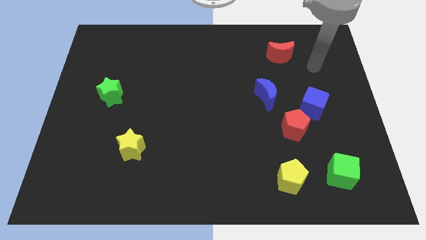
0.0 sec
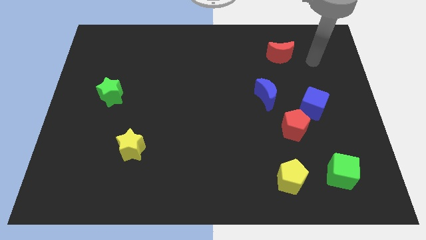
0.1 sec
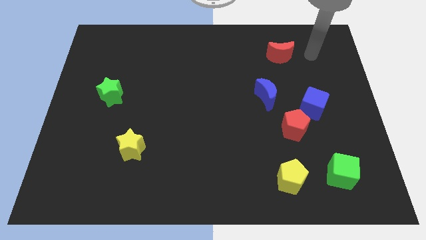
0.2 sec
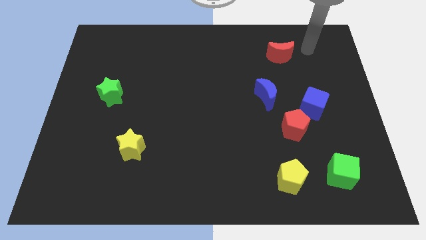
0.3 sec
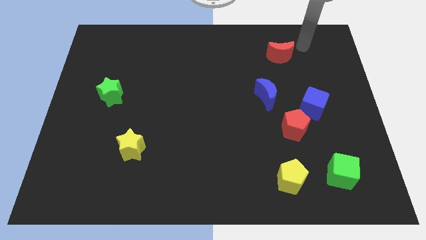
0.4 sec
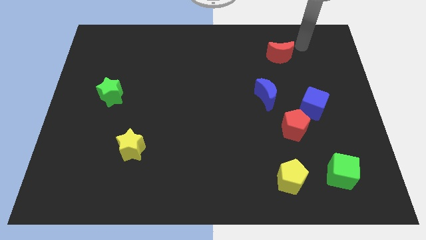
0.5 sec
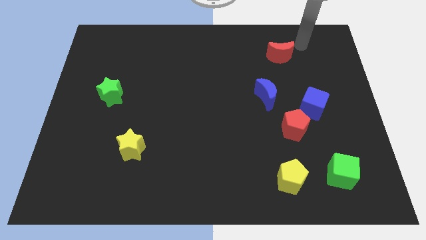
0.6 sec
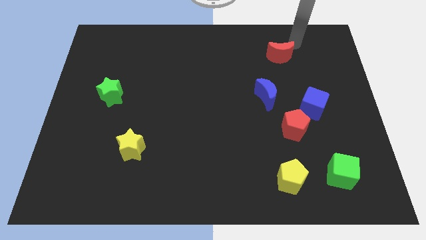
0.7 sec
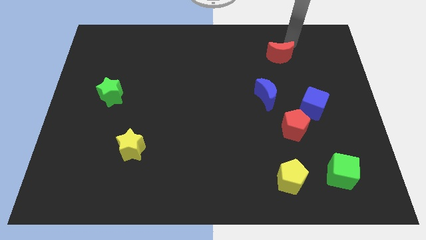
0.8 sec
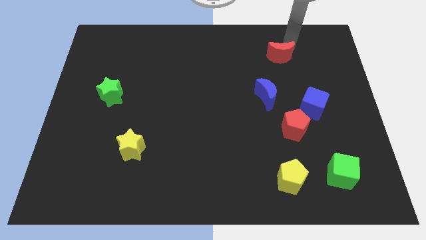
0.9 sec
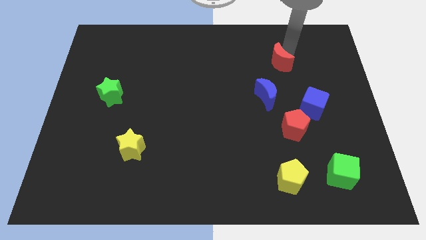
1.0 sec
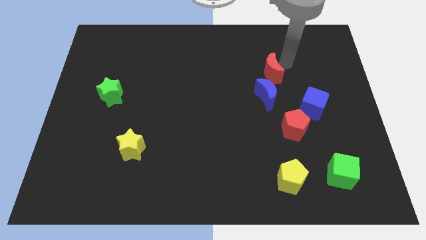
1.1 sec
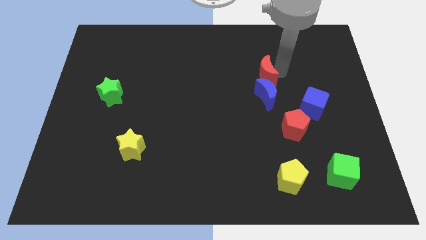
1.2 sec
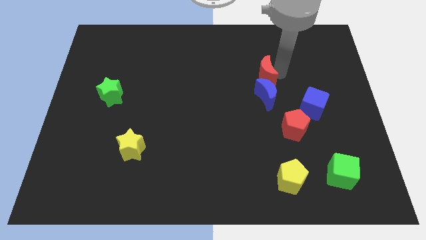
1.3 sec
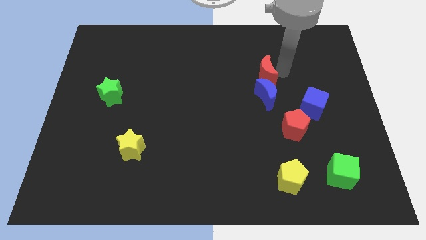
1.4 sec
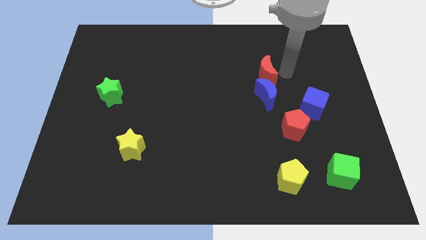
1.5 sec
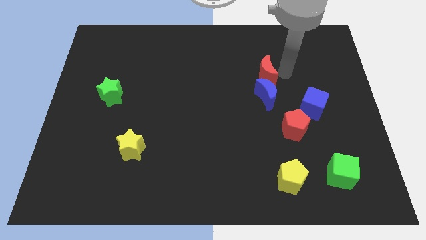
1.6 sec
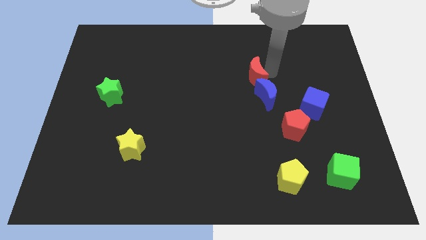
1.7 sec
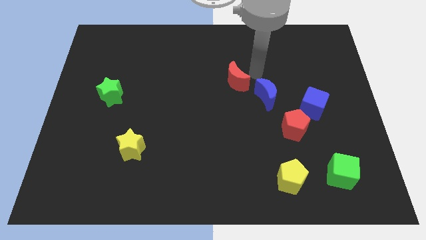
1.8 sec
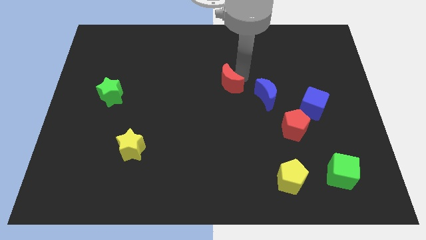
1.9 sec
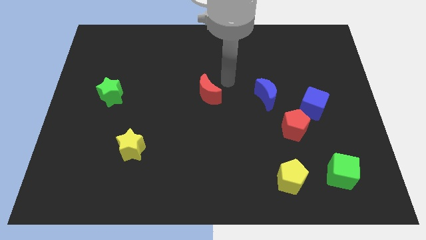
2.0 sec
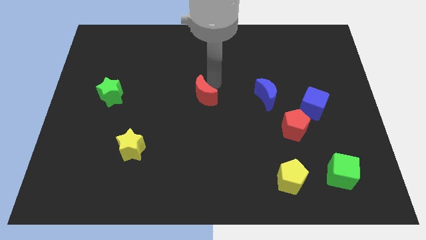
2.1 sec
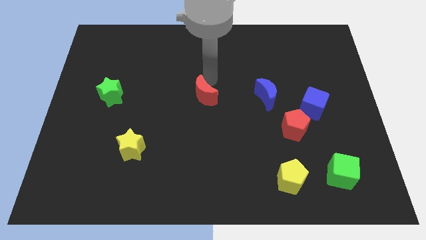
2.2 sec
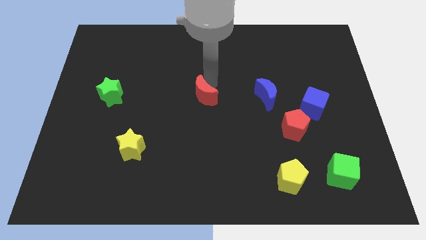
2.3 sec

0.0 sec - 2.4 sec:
move the red moon horizontally left to the blue moon

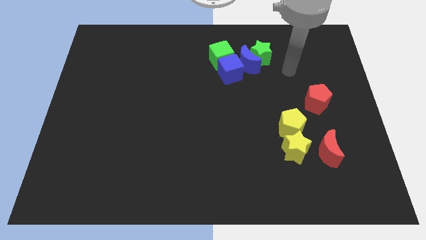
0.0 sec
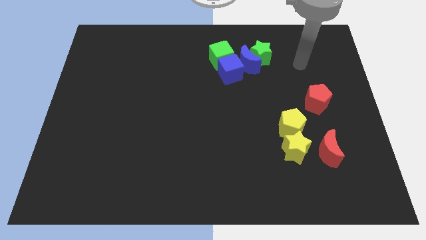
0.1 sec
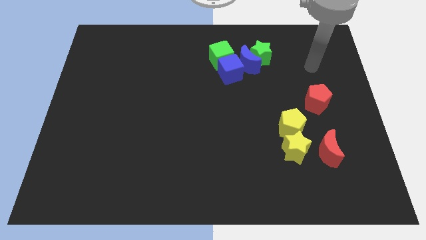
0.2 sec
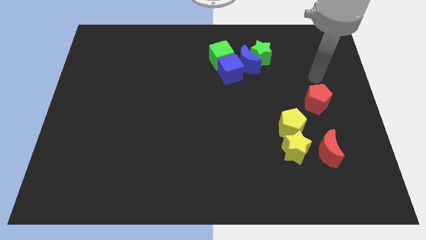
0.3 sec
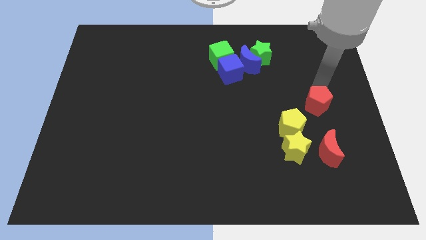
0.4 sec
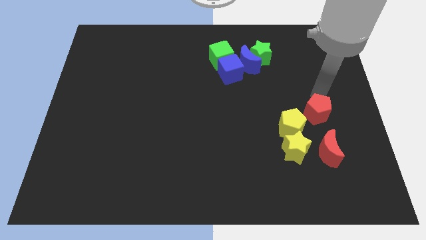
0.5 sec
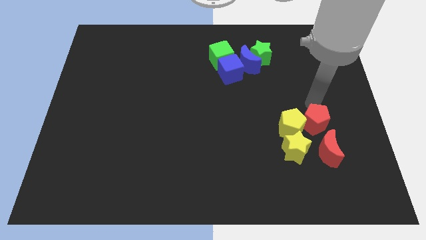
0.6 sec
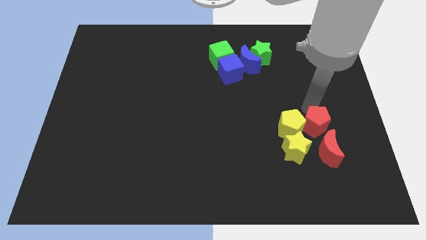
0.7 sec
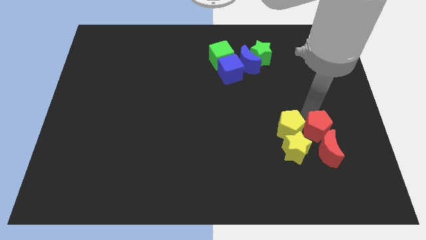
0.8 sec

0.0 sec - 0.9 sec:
place the red pentagon to the right of the yellow pentagon

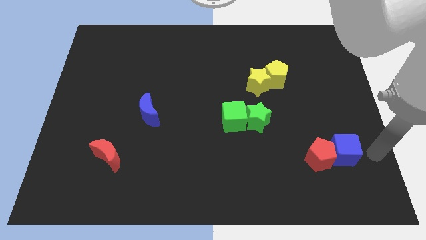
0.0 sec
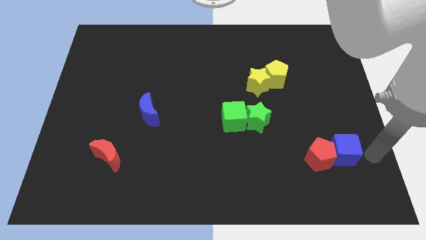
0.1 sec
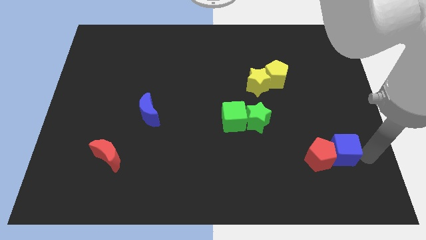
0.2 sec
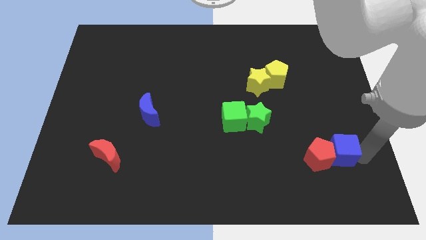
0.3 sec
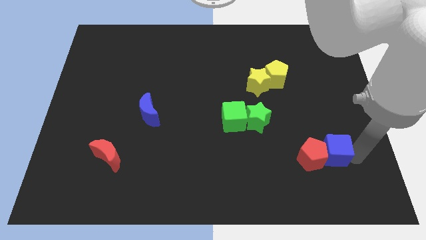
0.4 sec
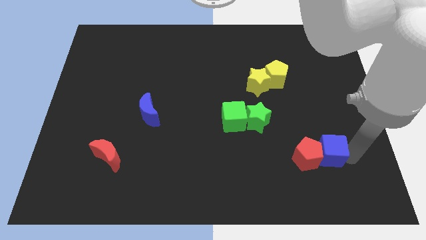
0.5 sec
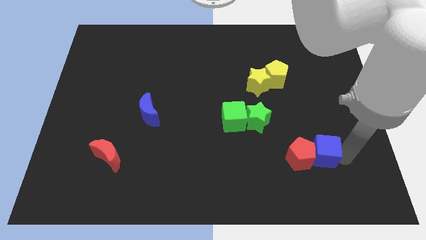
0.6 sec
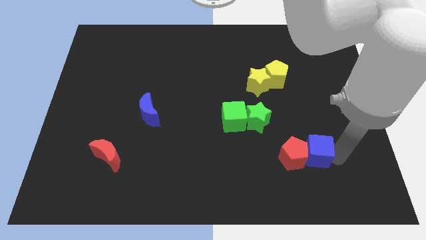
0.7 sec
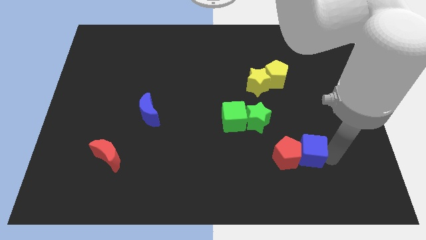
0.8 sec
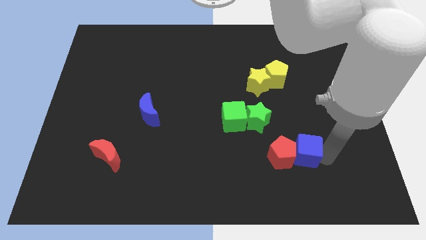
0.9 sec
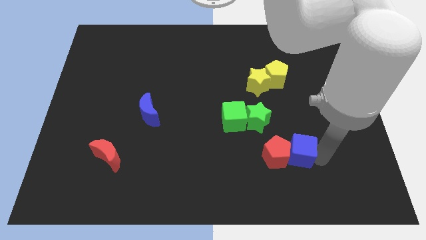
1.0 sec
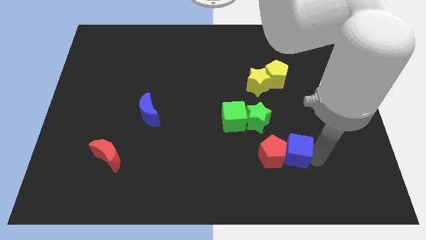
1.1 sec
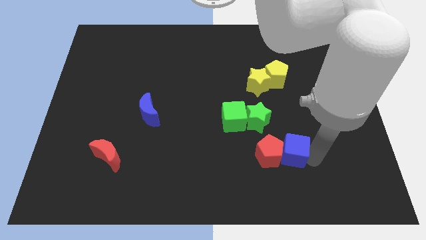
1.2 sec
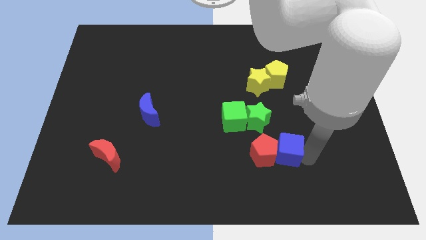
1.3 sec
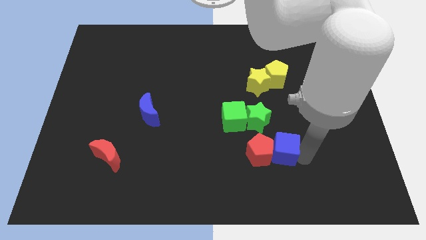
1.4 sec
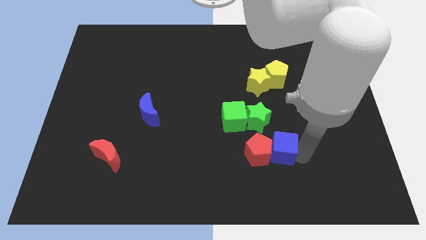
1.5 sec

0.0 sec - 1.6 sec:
push the red pentagon with the blue cube towards the center

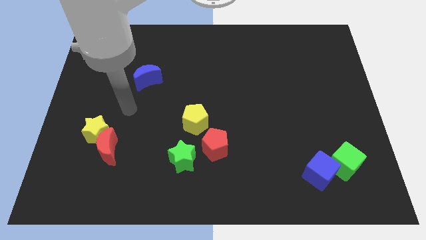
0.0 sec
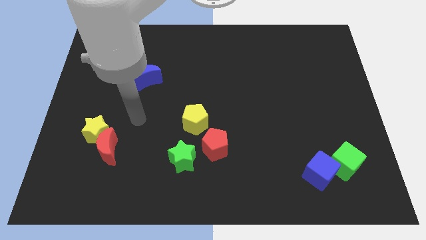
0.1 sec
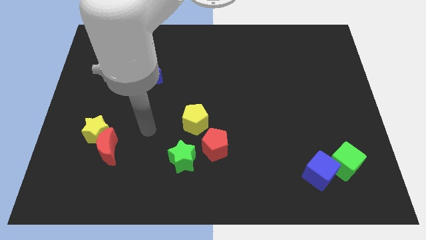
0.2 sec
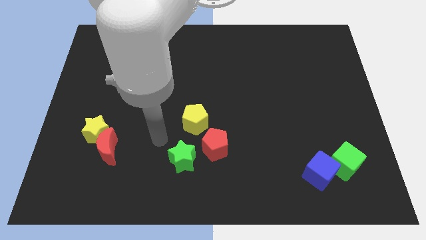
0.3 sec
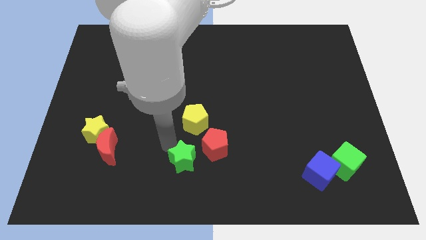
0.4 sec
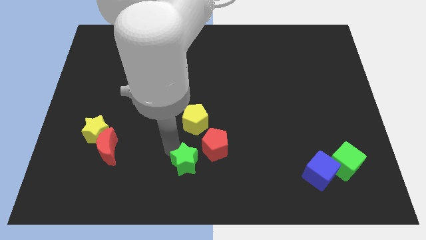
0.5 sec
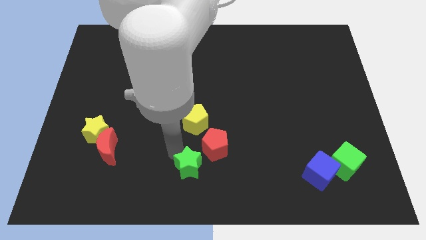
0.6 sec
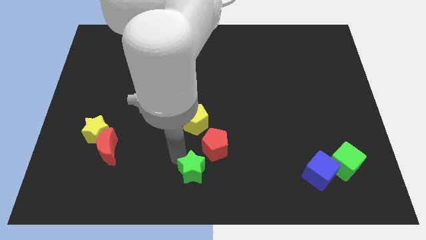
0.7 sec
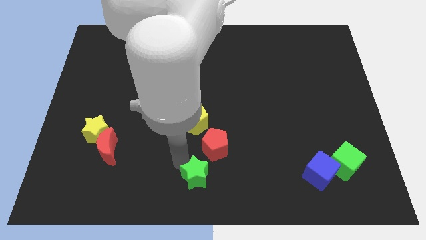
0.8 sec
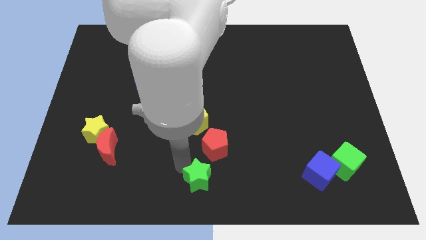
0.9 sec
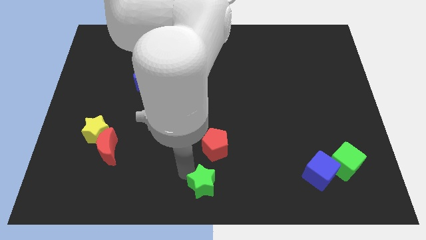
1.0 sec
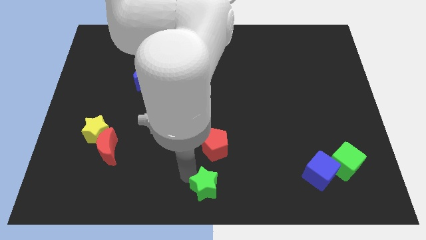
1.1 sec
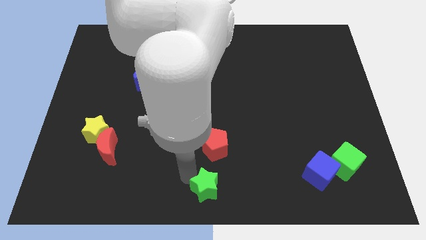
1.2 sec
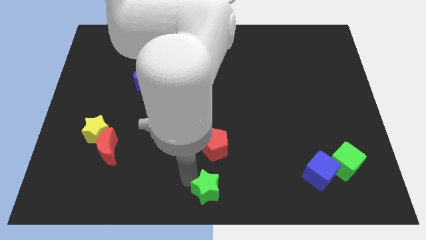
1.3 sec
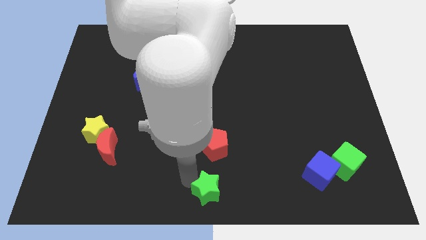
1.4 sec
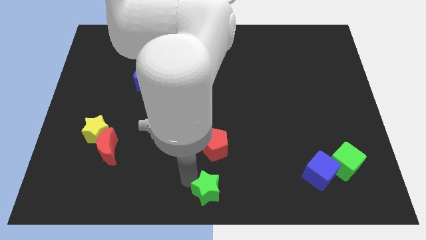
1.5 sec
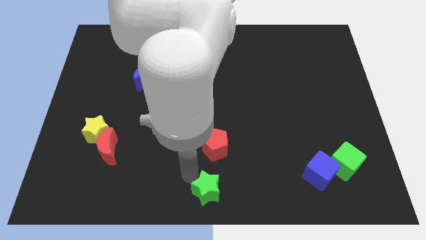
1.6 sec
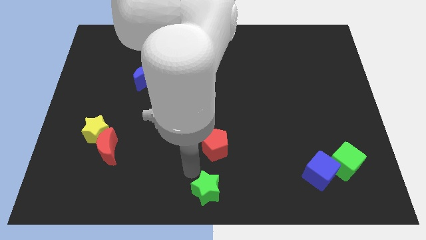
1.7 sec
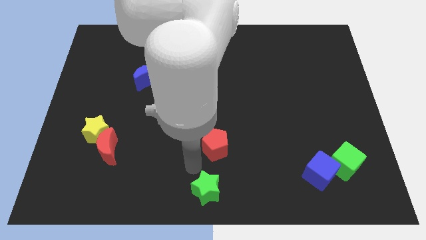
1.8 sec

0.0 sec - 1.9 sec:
move the green star to the bottom center

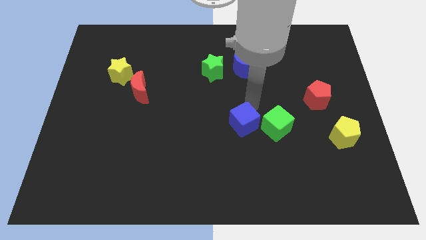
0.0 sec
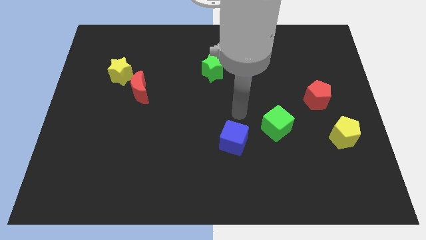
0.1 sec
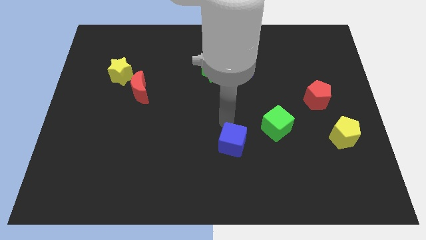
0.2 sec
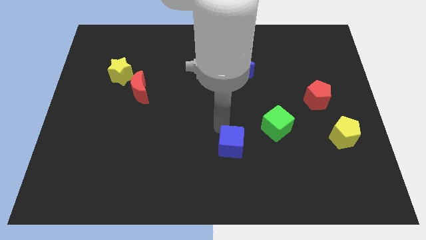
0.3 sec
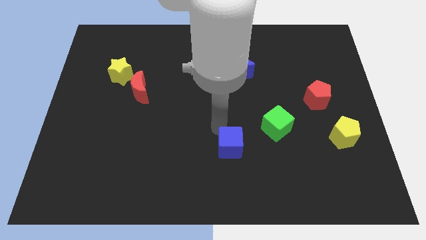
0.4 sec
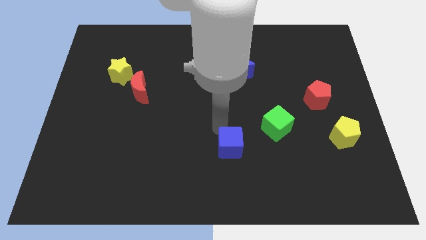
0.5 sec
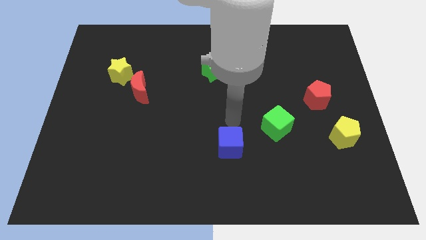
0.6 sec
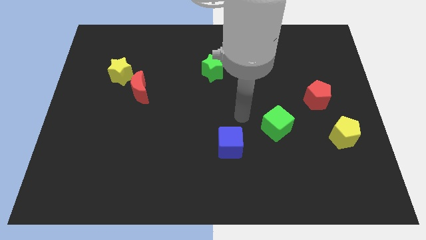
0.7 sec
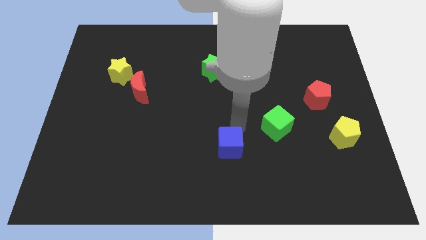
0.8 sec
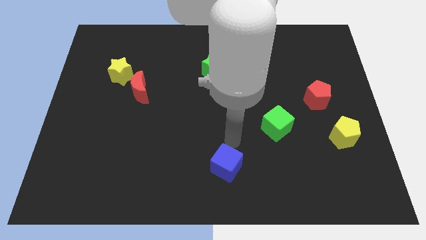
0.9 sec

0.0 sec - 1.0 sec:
drag the blue cube slightly downwards

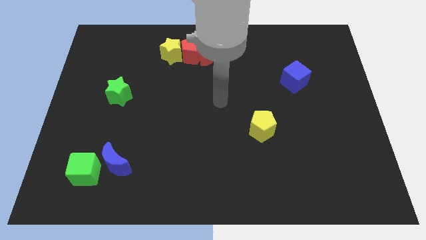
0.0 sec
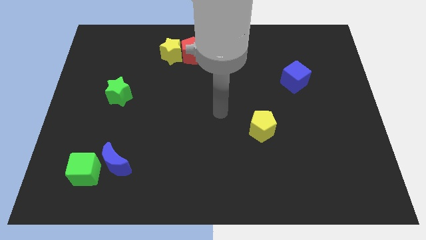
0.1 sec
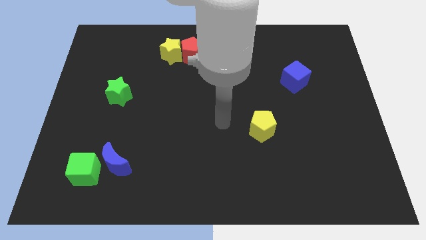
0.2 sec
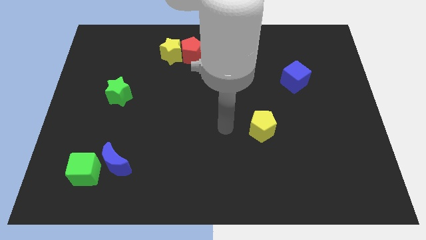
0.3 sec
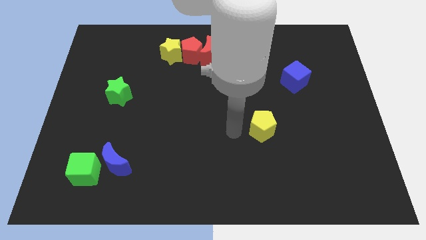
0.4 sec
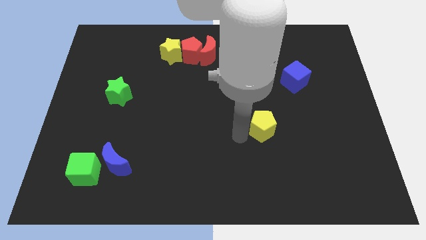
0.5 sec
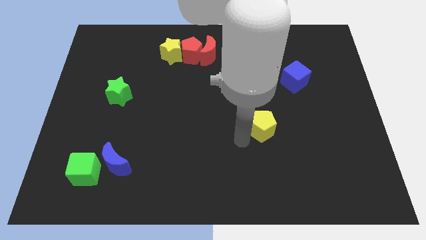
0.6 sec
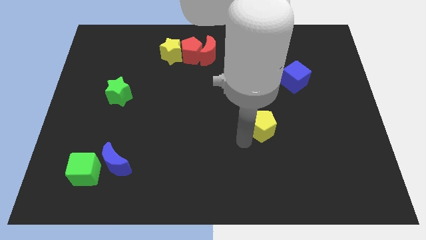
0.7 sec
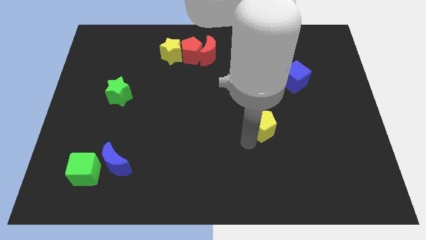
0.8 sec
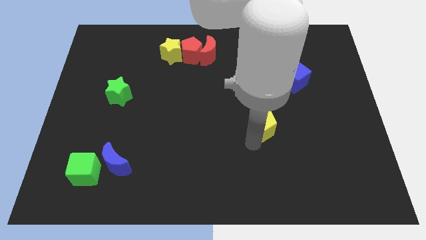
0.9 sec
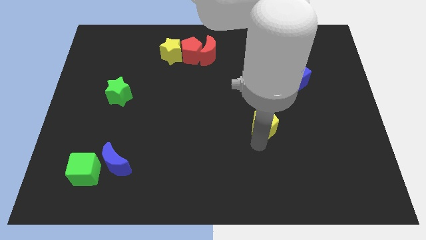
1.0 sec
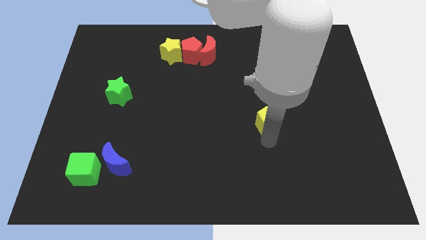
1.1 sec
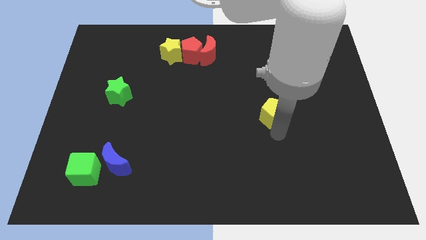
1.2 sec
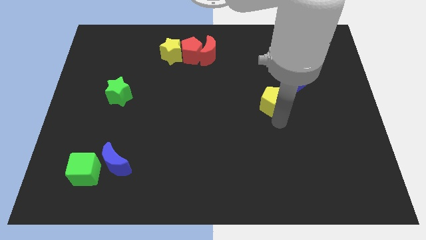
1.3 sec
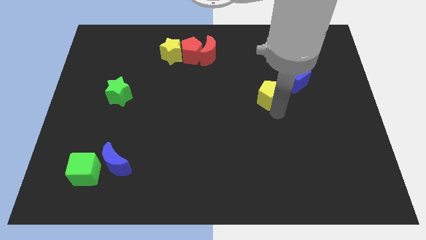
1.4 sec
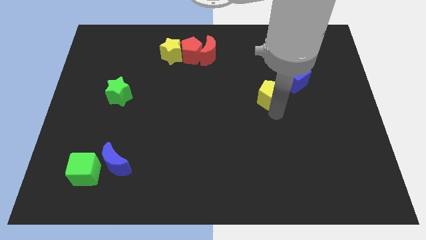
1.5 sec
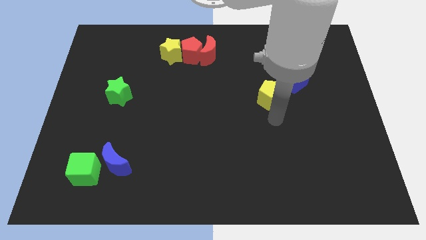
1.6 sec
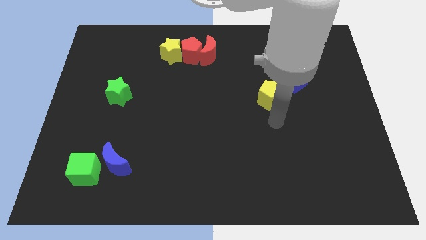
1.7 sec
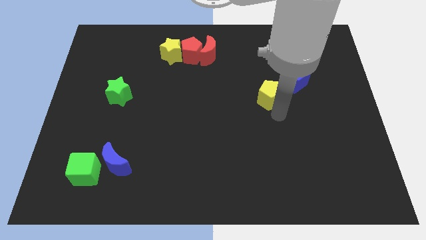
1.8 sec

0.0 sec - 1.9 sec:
place the arm below the yellow pentagon
